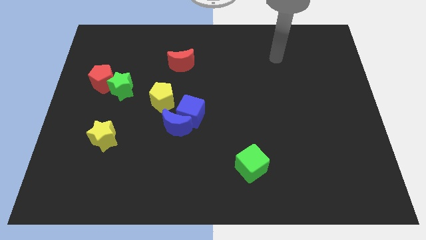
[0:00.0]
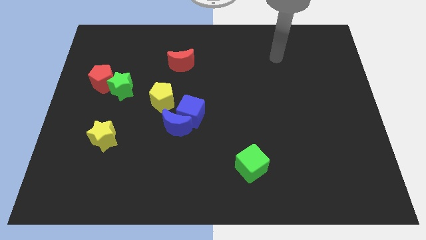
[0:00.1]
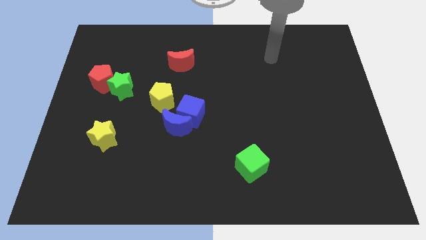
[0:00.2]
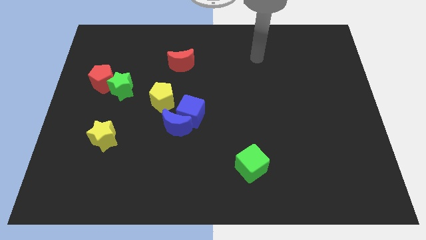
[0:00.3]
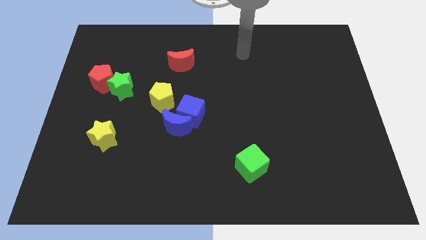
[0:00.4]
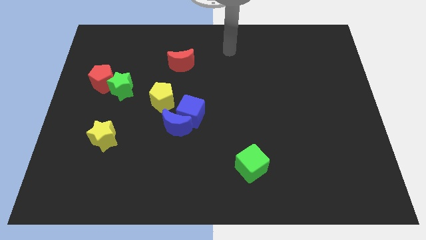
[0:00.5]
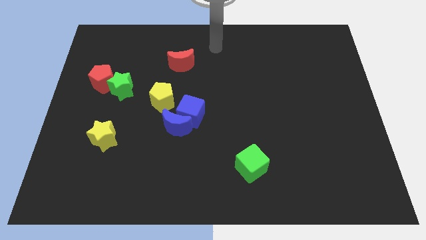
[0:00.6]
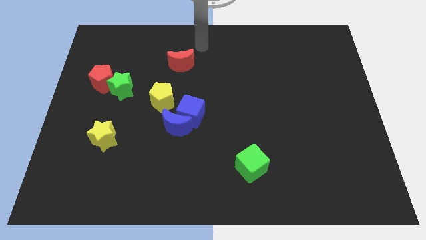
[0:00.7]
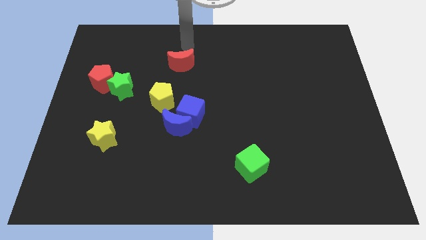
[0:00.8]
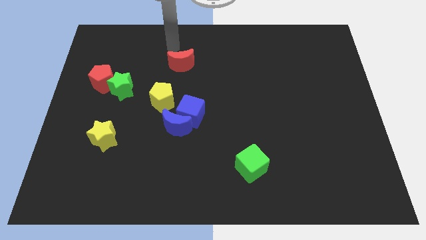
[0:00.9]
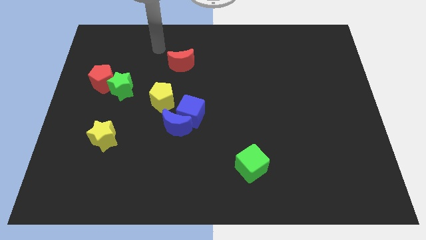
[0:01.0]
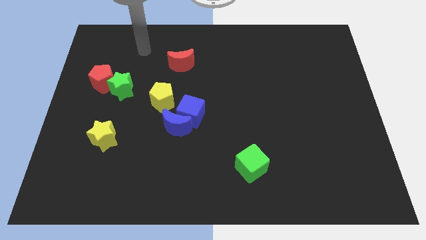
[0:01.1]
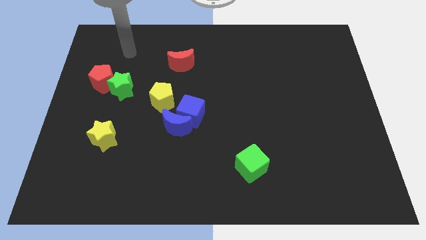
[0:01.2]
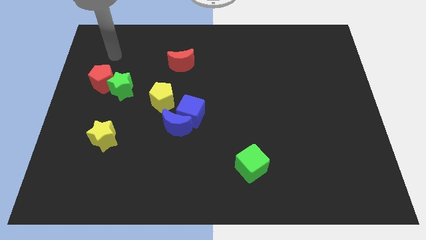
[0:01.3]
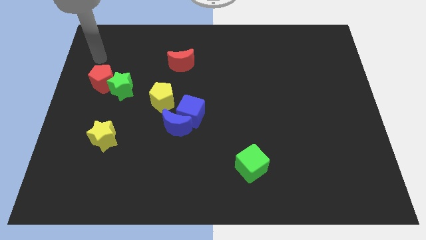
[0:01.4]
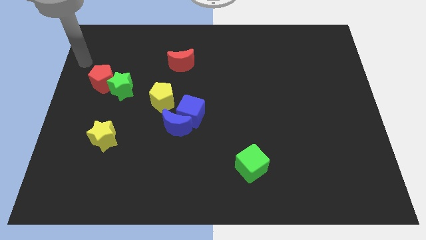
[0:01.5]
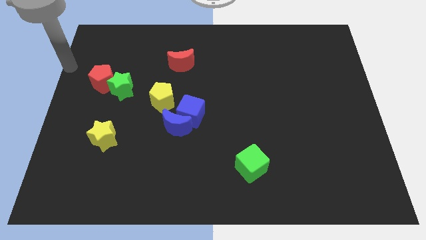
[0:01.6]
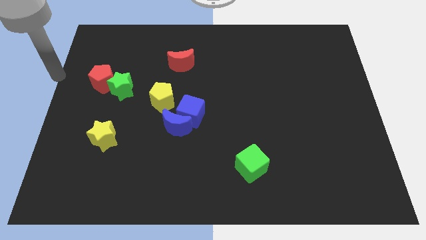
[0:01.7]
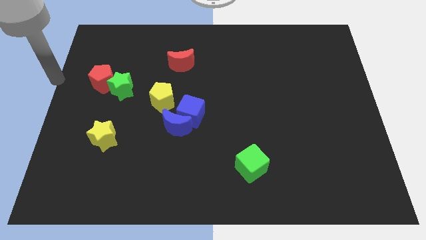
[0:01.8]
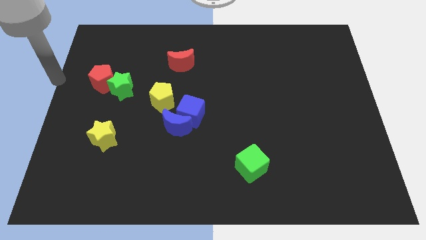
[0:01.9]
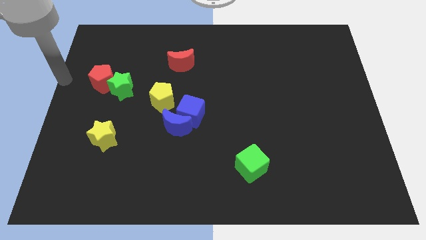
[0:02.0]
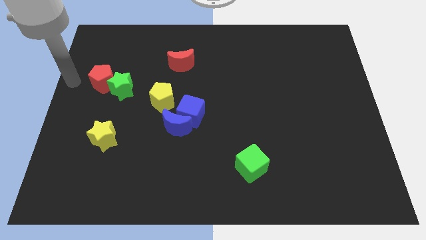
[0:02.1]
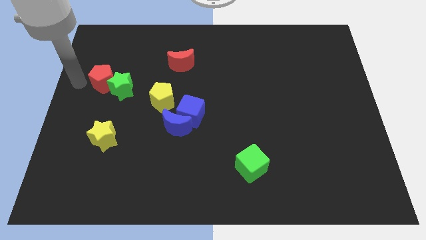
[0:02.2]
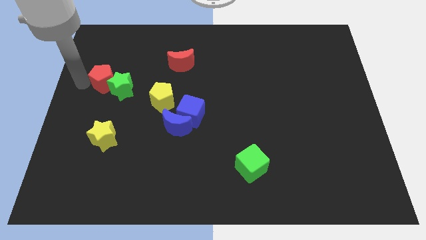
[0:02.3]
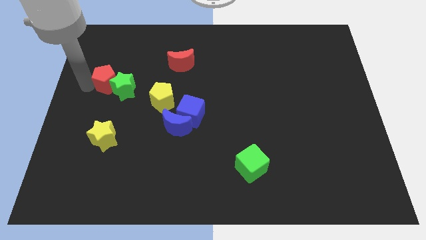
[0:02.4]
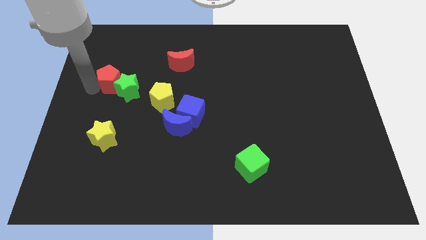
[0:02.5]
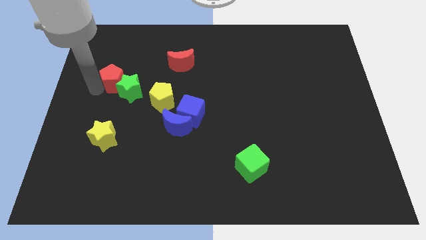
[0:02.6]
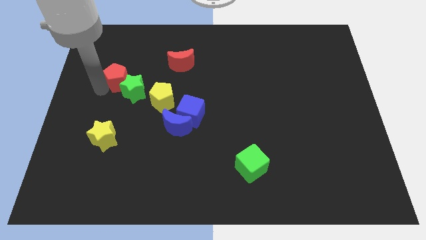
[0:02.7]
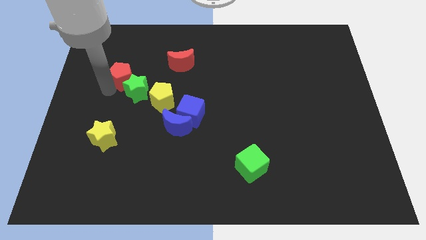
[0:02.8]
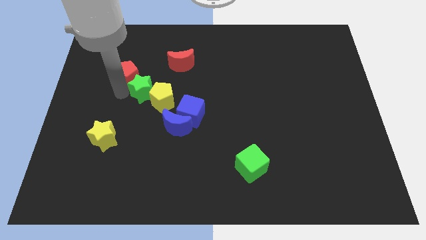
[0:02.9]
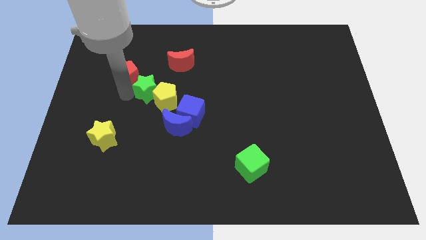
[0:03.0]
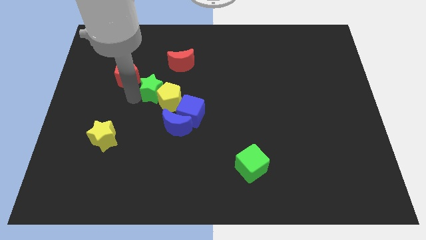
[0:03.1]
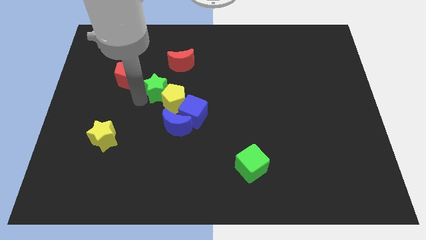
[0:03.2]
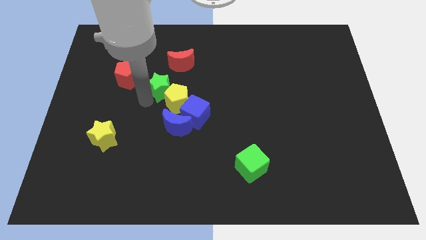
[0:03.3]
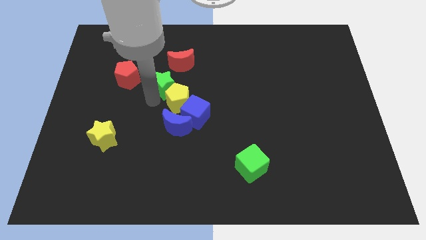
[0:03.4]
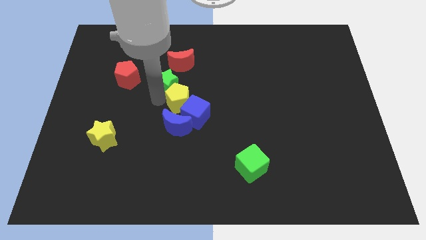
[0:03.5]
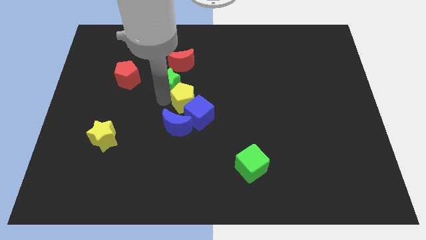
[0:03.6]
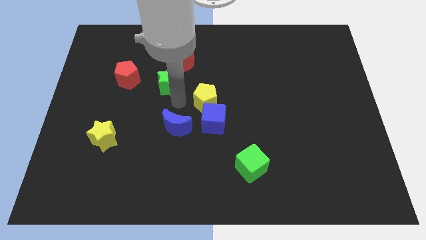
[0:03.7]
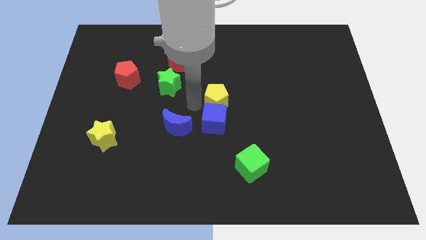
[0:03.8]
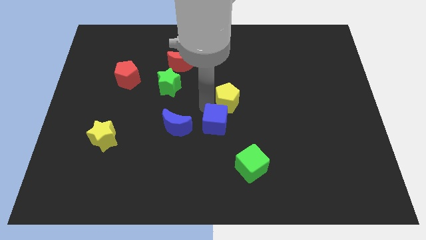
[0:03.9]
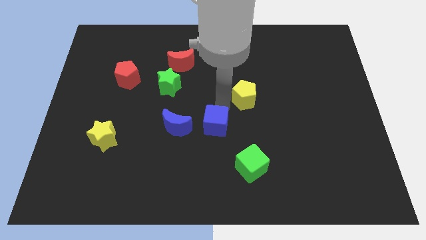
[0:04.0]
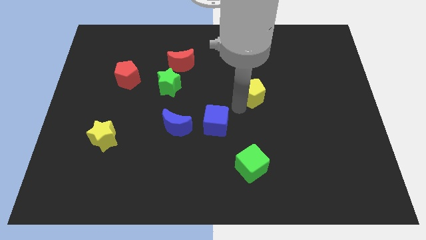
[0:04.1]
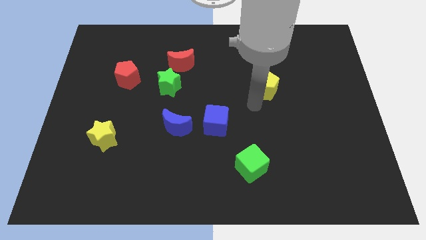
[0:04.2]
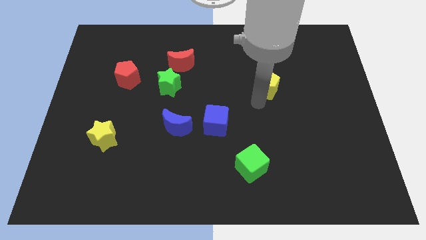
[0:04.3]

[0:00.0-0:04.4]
move yellow pentagon towards right

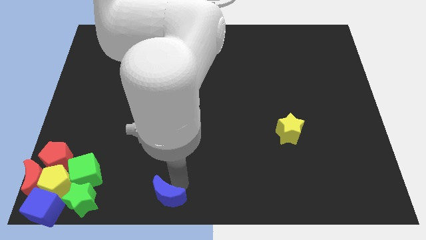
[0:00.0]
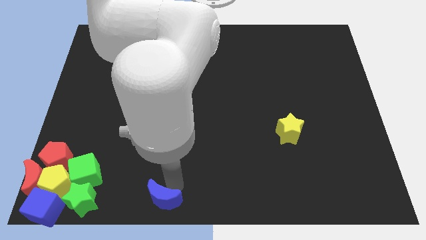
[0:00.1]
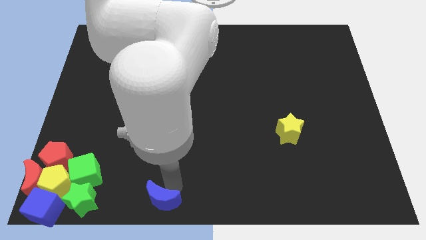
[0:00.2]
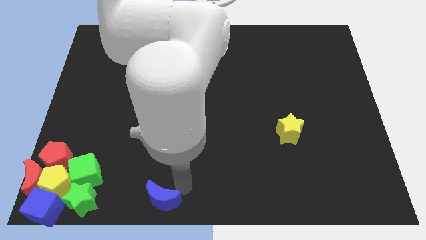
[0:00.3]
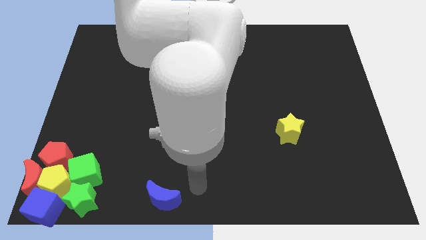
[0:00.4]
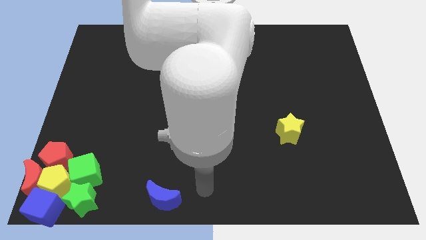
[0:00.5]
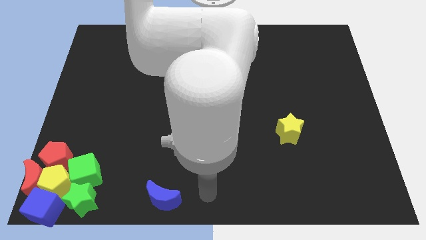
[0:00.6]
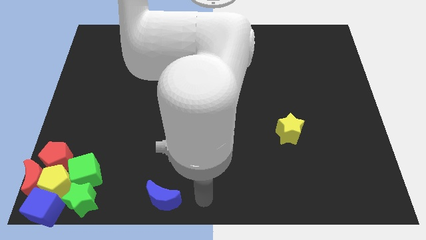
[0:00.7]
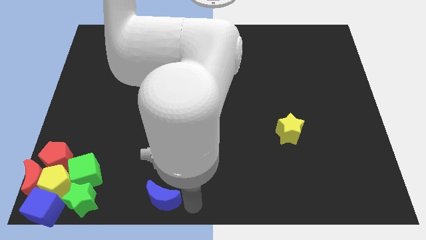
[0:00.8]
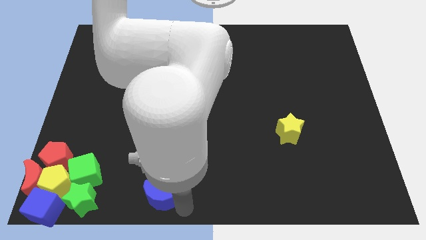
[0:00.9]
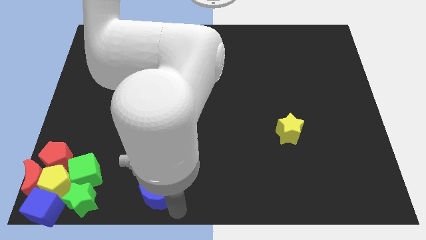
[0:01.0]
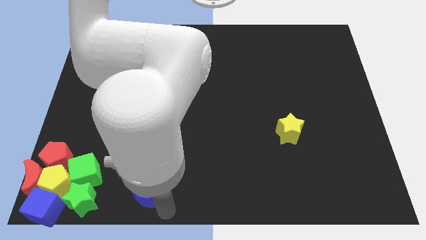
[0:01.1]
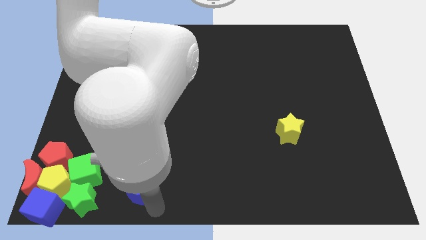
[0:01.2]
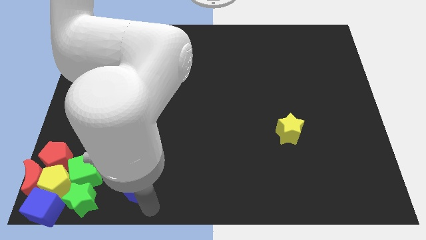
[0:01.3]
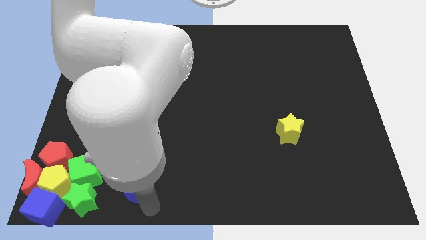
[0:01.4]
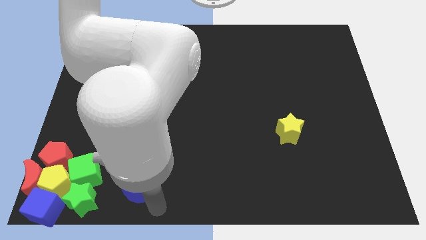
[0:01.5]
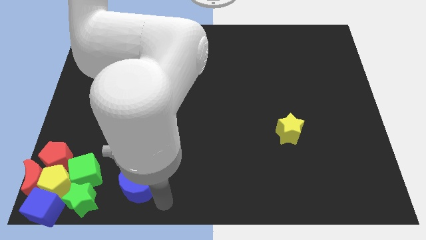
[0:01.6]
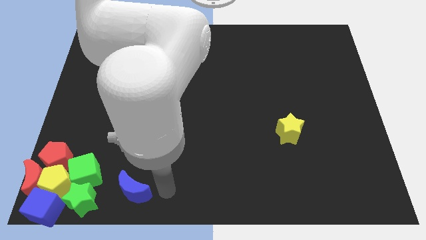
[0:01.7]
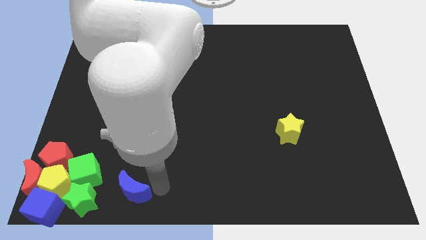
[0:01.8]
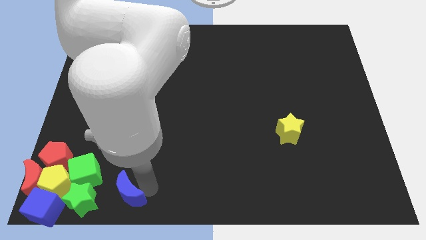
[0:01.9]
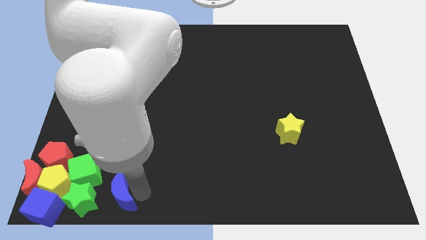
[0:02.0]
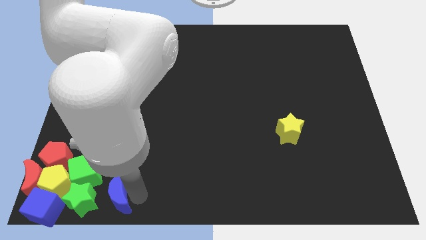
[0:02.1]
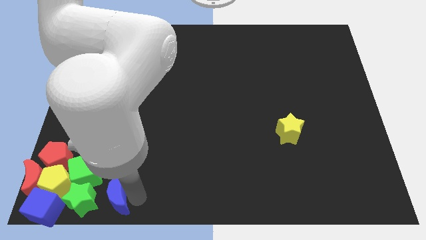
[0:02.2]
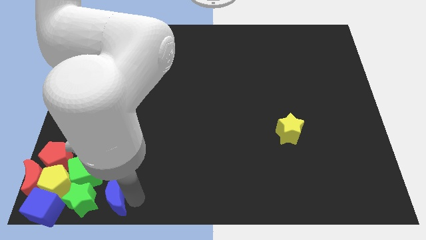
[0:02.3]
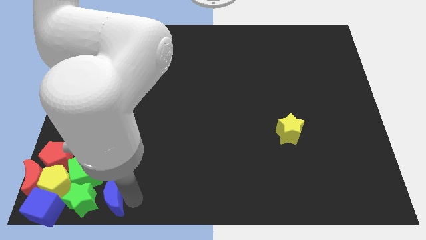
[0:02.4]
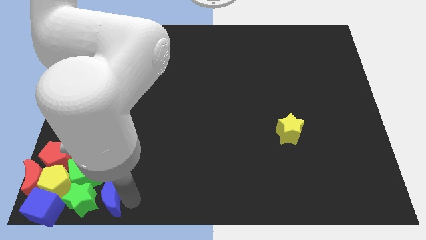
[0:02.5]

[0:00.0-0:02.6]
push the blue crescent towards the green star

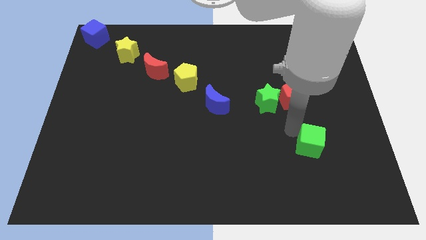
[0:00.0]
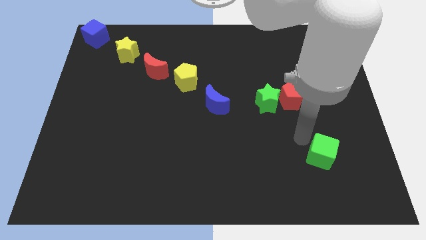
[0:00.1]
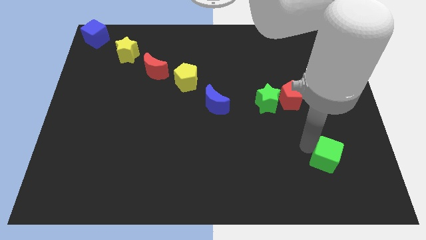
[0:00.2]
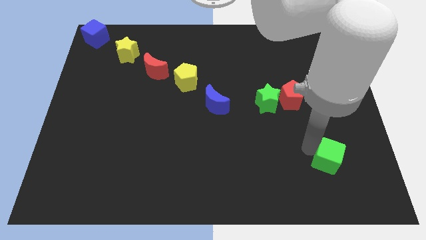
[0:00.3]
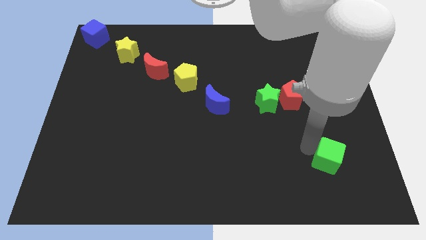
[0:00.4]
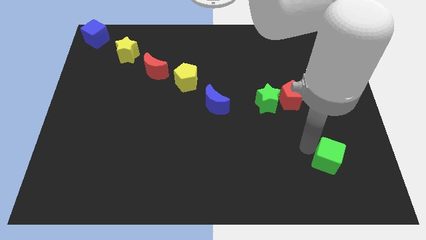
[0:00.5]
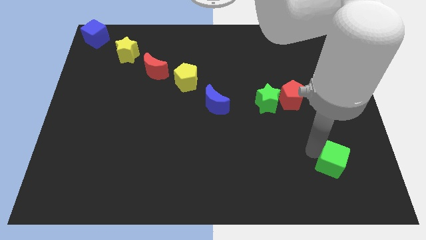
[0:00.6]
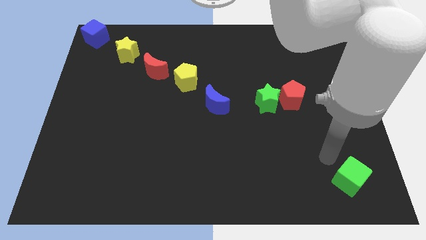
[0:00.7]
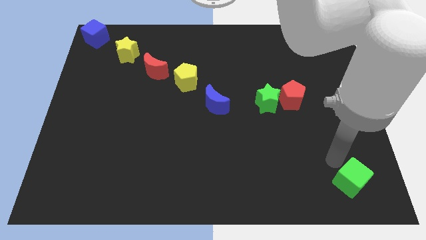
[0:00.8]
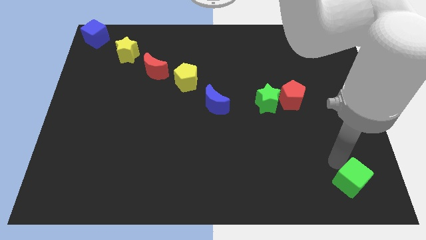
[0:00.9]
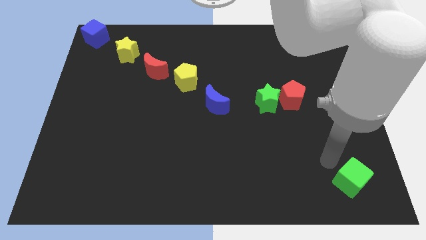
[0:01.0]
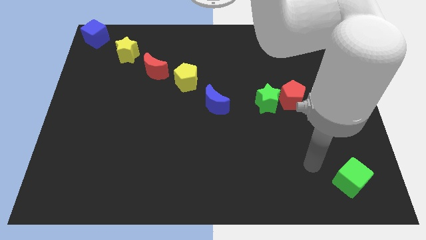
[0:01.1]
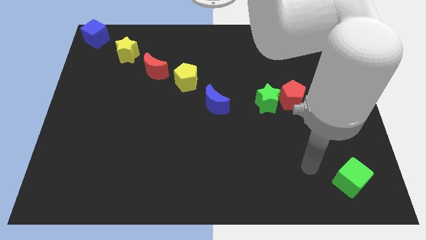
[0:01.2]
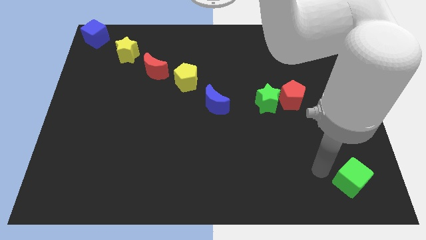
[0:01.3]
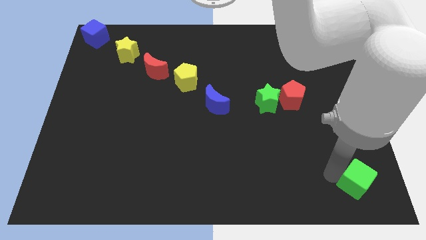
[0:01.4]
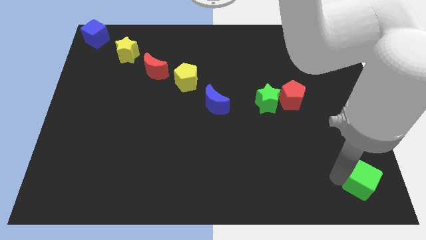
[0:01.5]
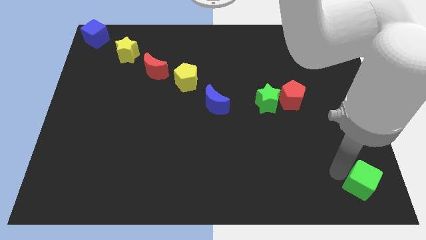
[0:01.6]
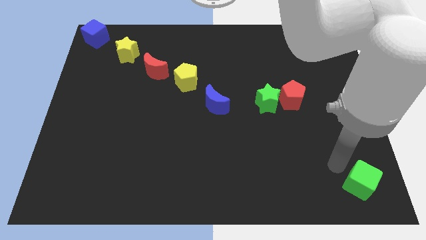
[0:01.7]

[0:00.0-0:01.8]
move the green block to the right bottom of the board

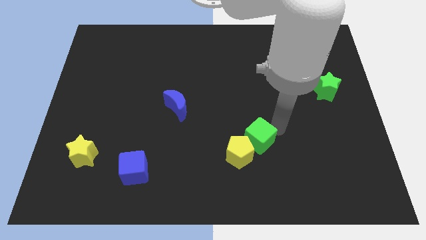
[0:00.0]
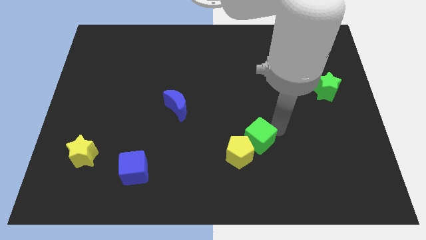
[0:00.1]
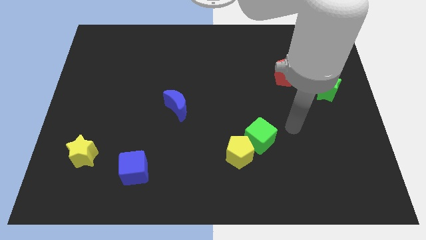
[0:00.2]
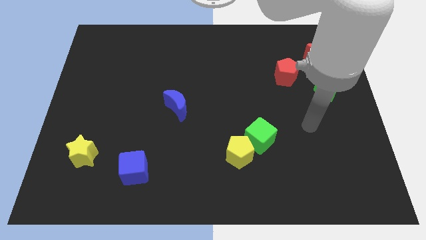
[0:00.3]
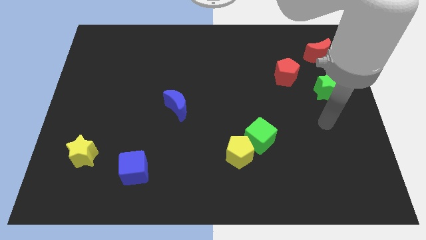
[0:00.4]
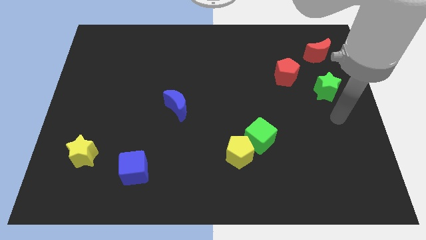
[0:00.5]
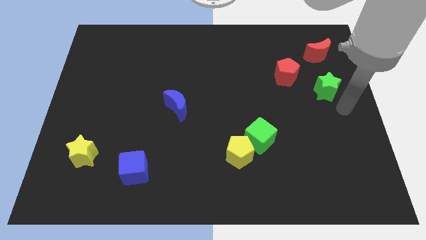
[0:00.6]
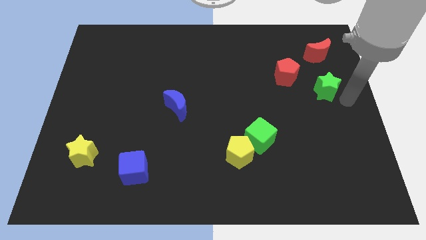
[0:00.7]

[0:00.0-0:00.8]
move your arm away from green cube
